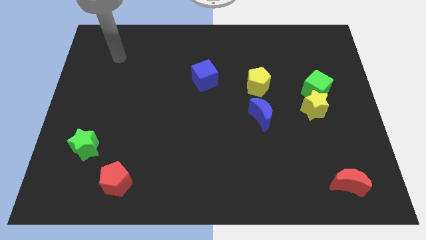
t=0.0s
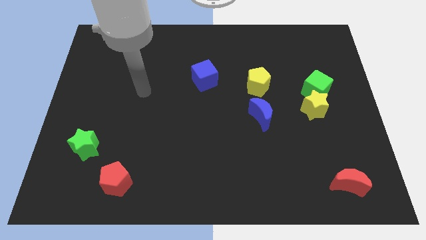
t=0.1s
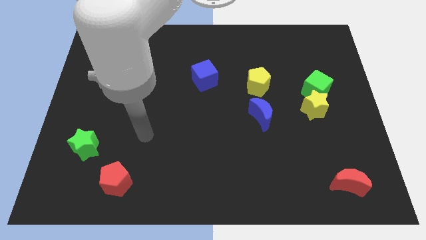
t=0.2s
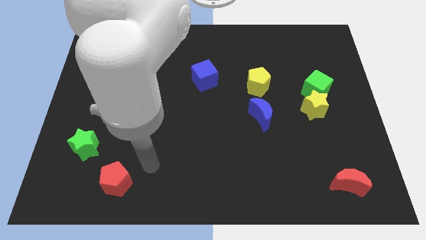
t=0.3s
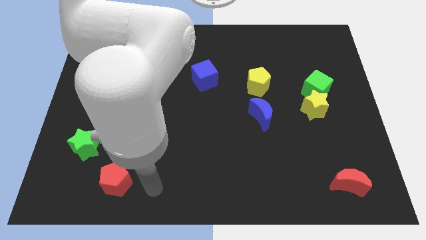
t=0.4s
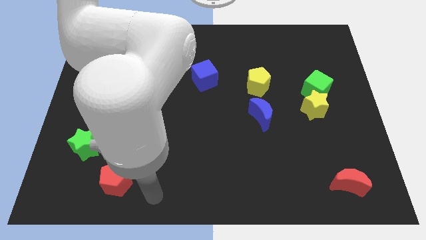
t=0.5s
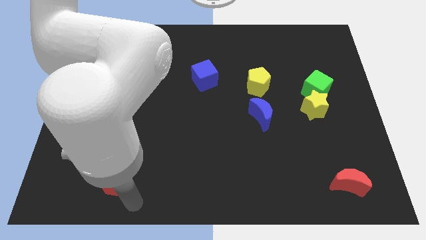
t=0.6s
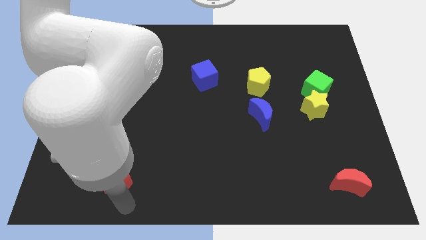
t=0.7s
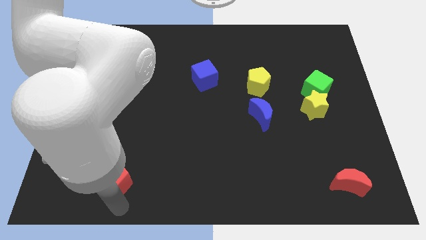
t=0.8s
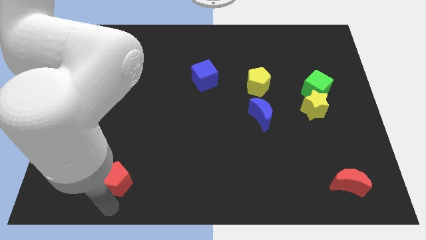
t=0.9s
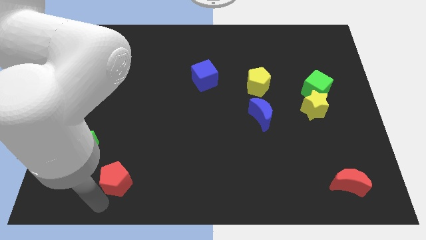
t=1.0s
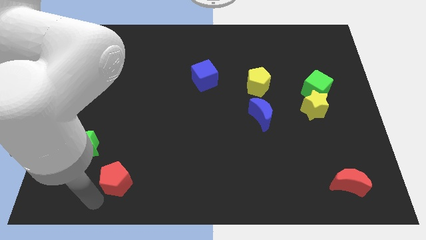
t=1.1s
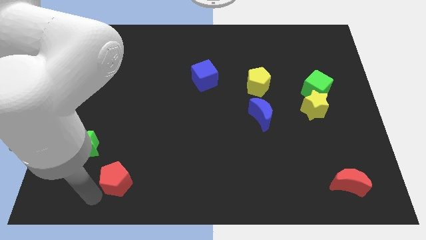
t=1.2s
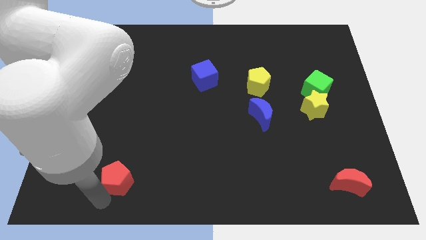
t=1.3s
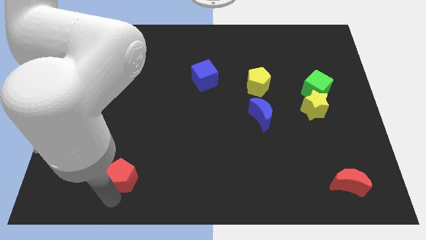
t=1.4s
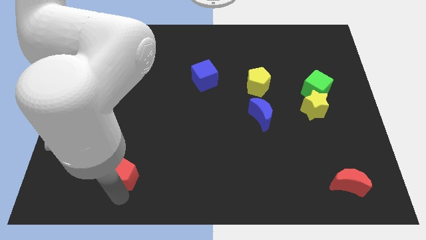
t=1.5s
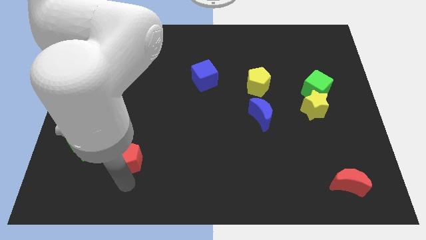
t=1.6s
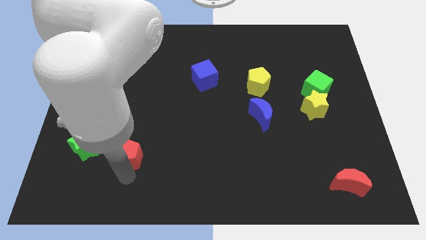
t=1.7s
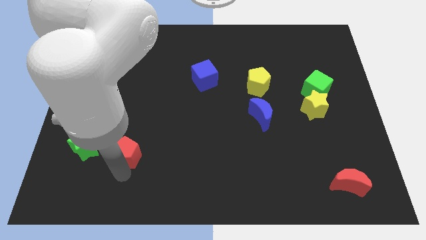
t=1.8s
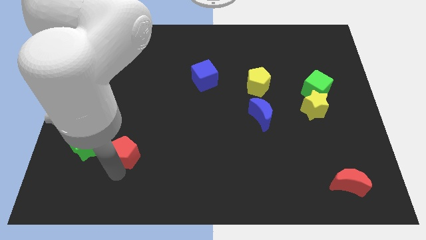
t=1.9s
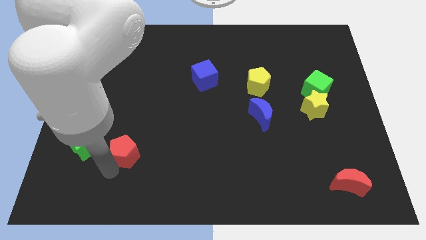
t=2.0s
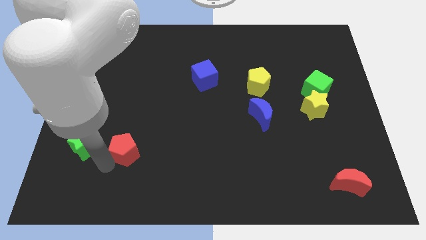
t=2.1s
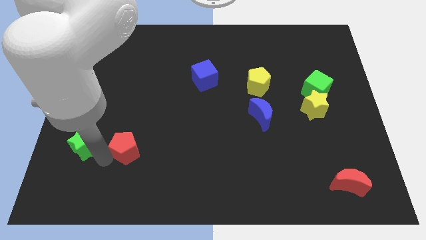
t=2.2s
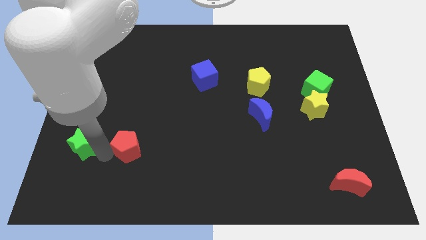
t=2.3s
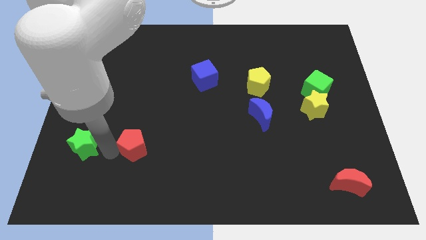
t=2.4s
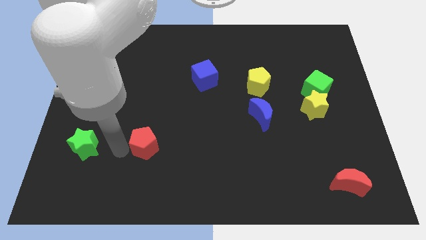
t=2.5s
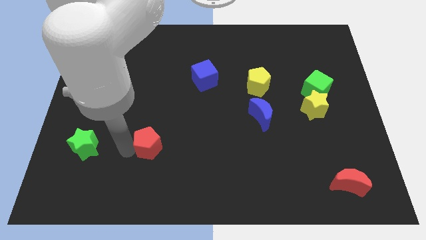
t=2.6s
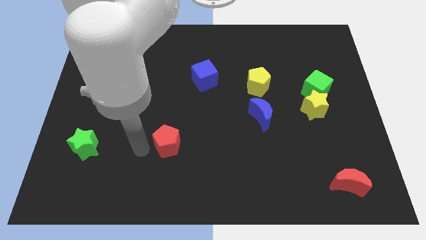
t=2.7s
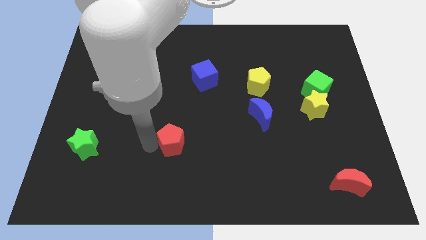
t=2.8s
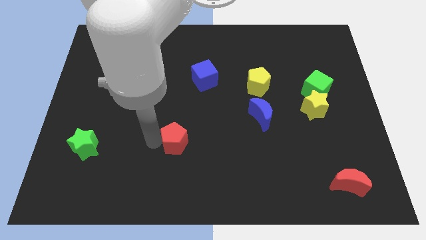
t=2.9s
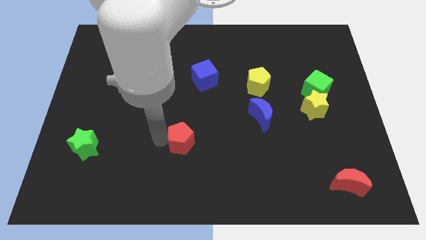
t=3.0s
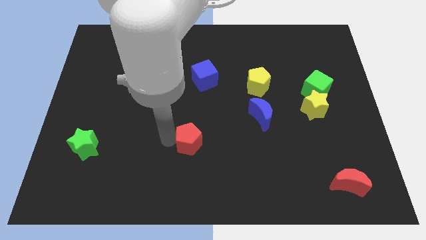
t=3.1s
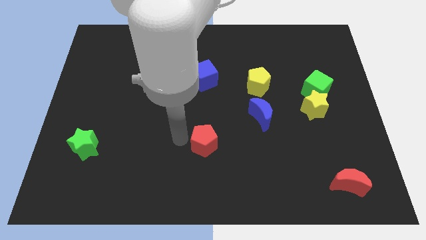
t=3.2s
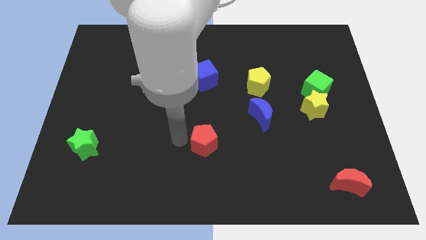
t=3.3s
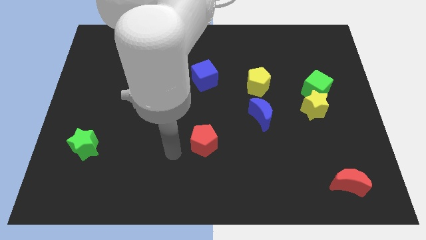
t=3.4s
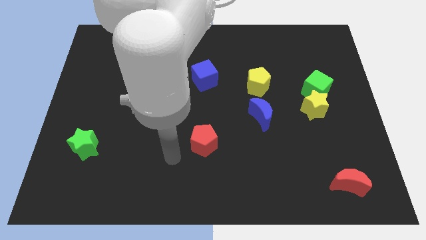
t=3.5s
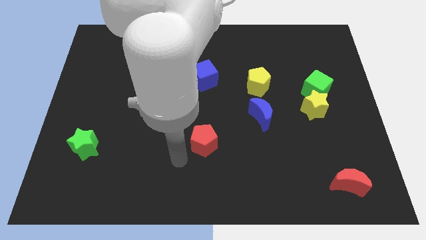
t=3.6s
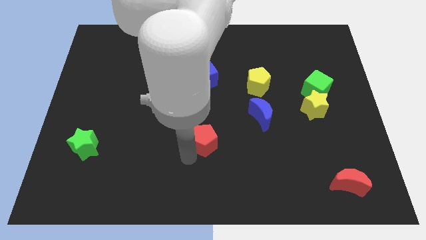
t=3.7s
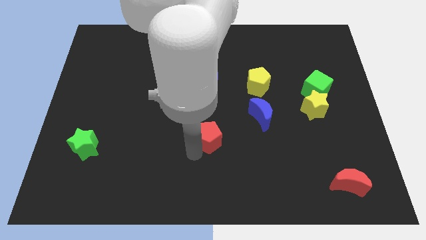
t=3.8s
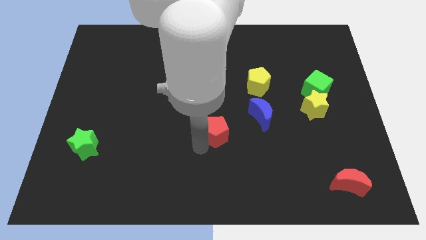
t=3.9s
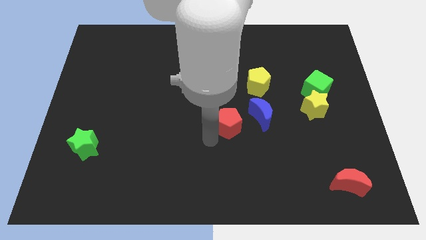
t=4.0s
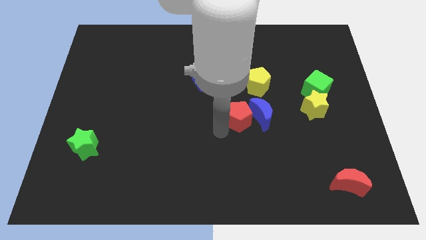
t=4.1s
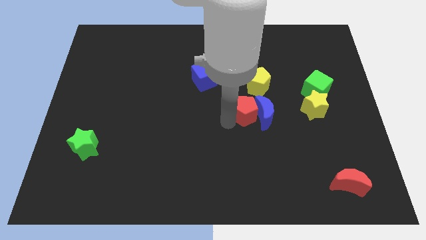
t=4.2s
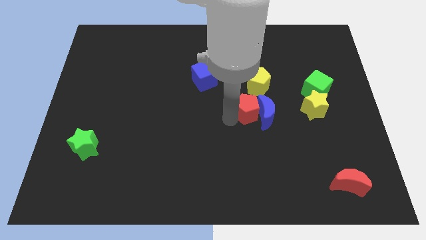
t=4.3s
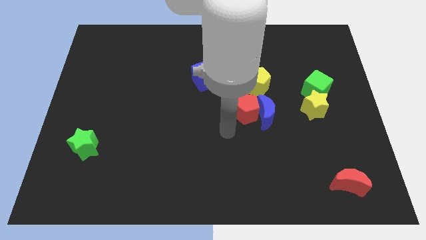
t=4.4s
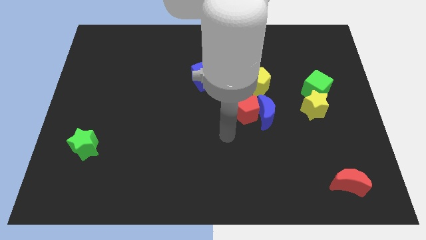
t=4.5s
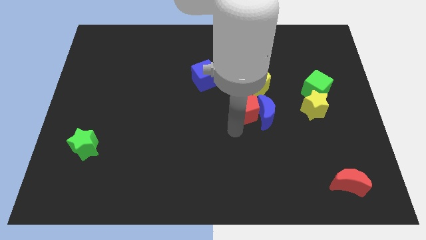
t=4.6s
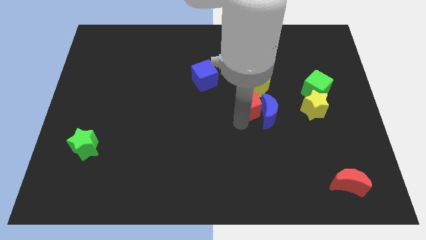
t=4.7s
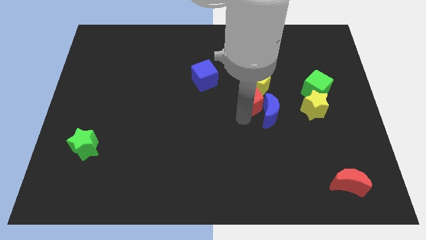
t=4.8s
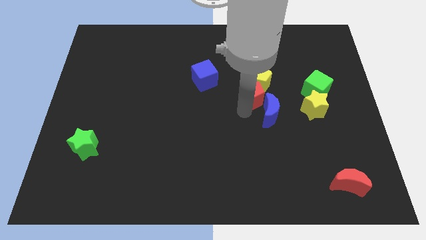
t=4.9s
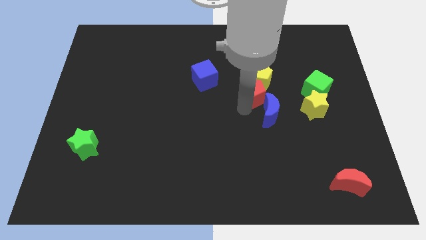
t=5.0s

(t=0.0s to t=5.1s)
slide the red pentagon towards the yellow pentagon

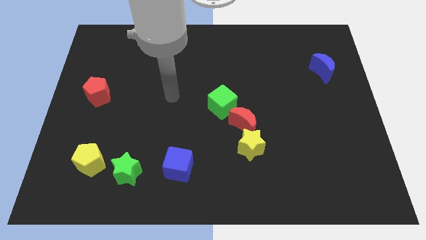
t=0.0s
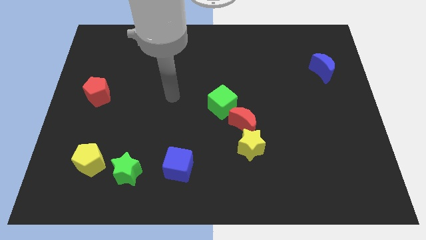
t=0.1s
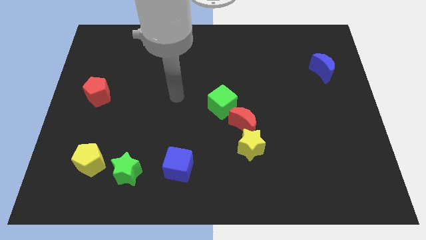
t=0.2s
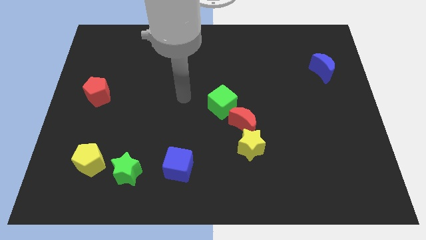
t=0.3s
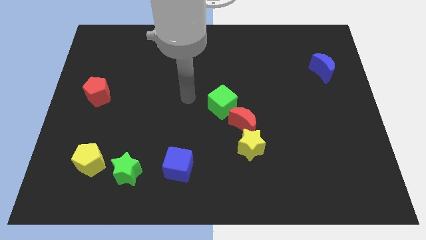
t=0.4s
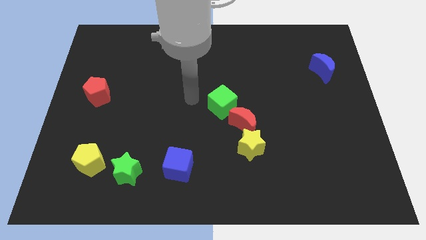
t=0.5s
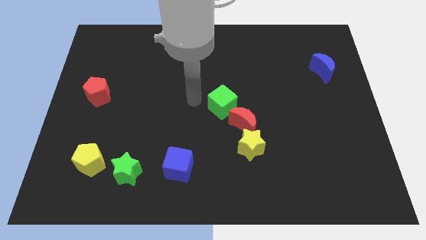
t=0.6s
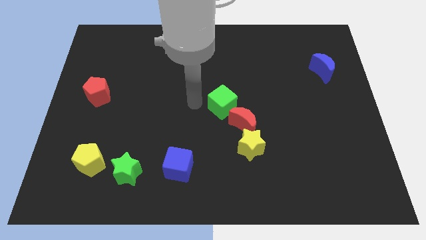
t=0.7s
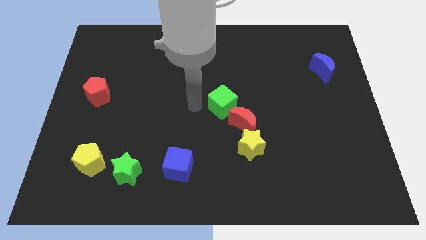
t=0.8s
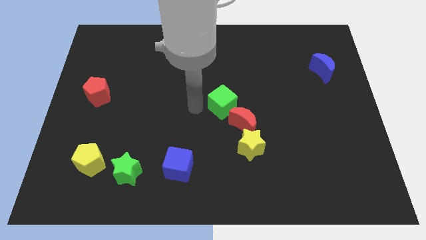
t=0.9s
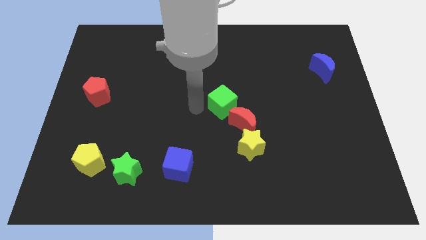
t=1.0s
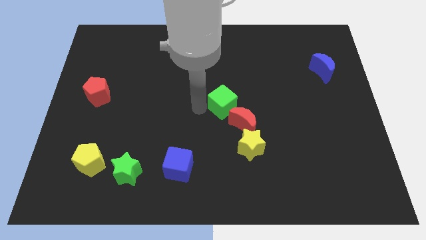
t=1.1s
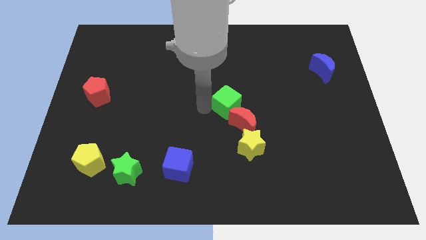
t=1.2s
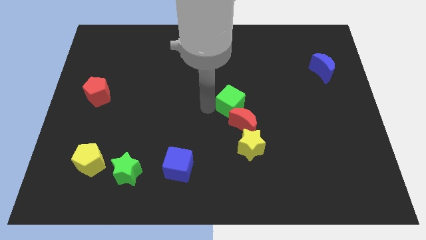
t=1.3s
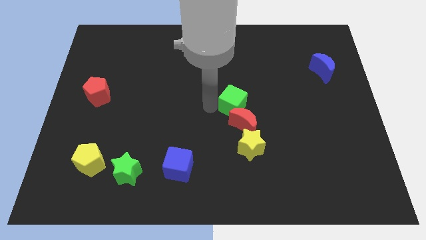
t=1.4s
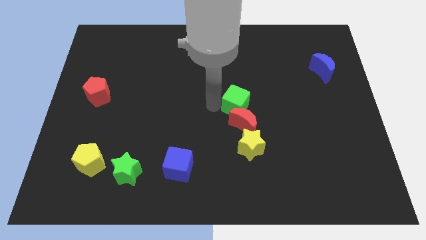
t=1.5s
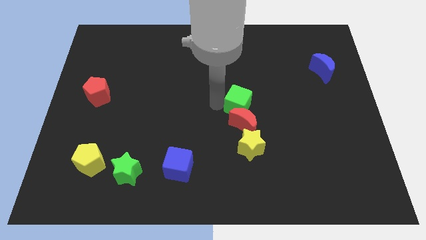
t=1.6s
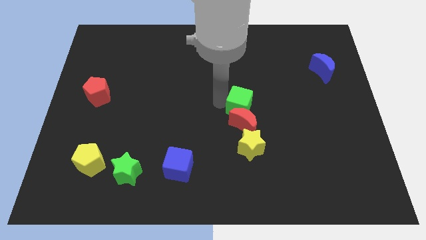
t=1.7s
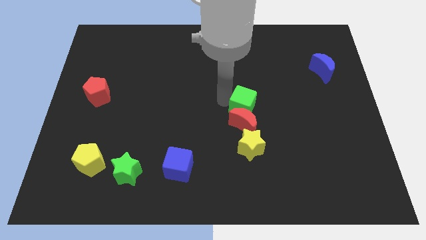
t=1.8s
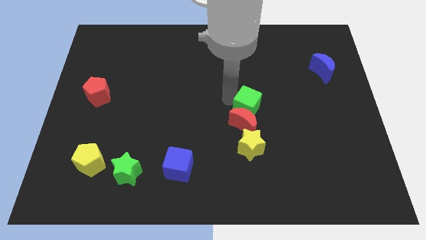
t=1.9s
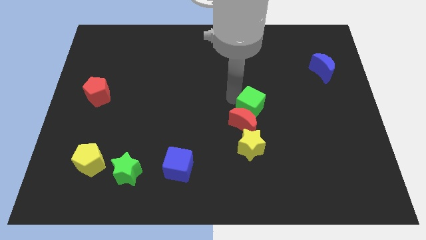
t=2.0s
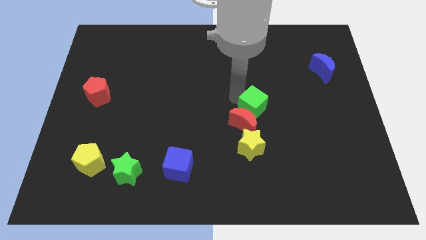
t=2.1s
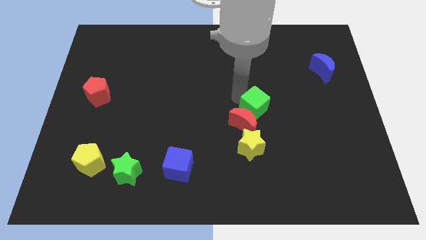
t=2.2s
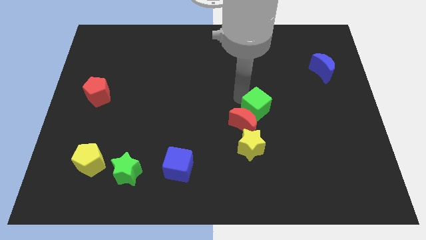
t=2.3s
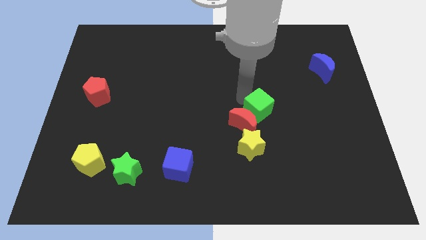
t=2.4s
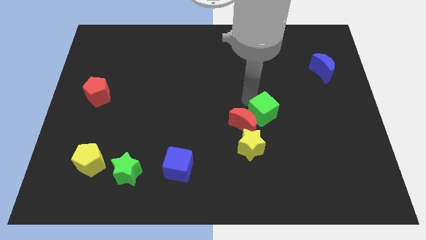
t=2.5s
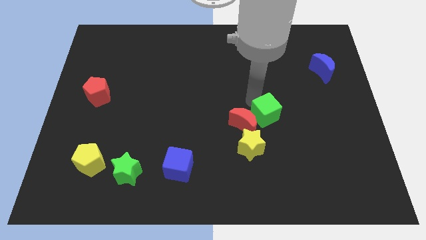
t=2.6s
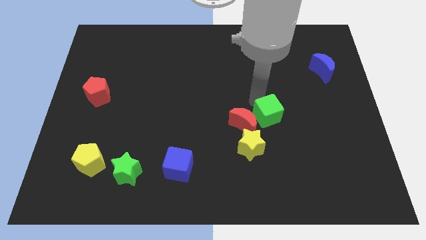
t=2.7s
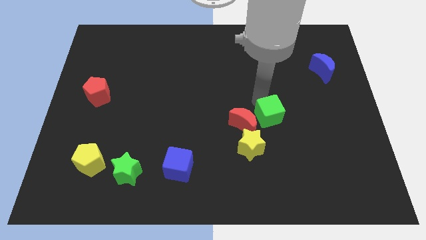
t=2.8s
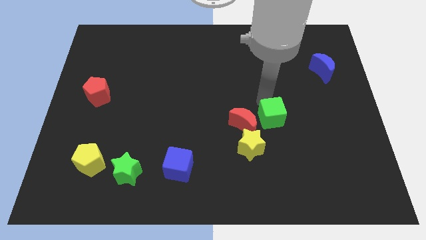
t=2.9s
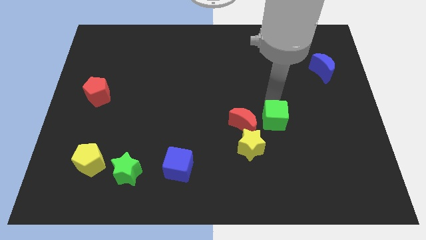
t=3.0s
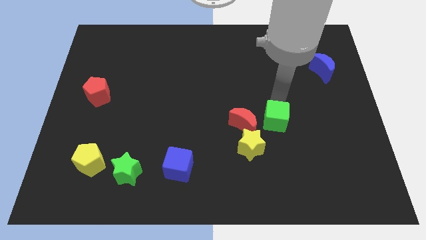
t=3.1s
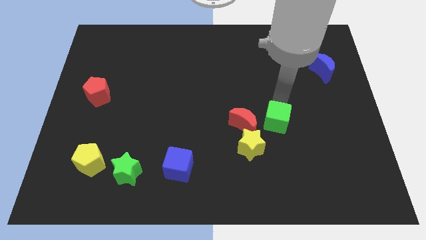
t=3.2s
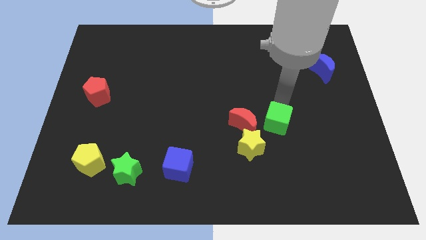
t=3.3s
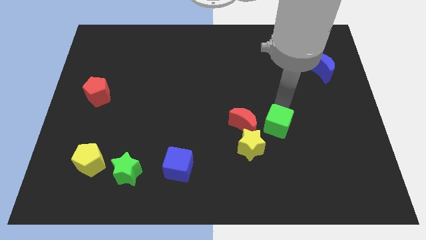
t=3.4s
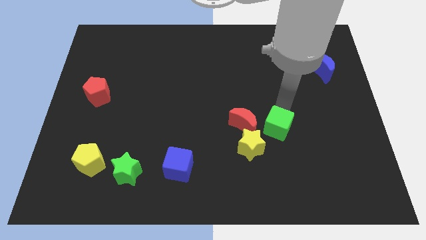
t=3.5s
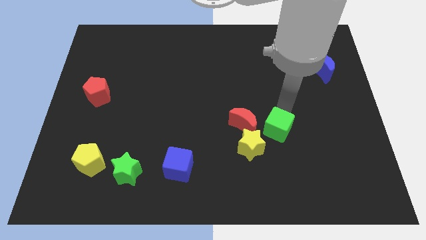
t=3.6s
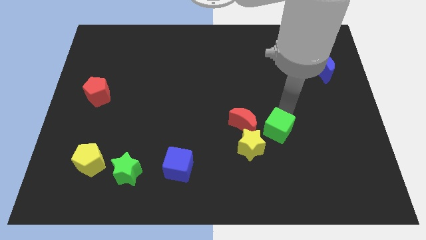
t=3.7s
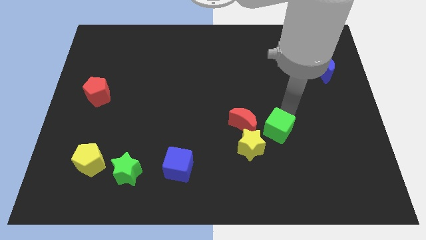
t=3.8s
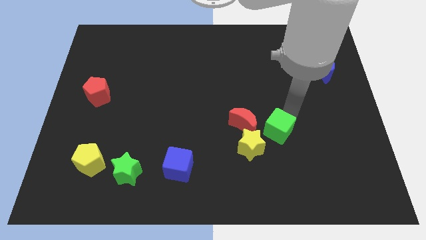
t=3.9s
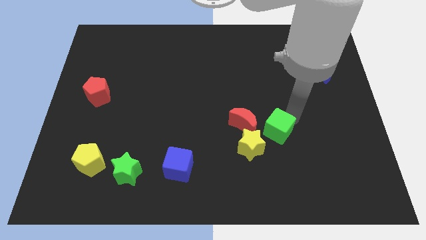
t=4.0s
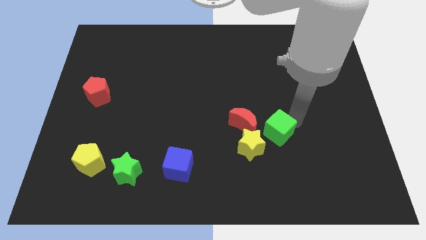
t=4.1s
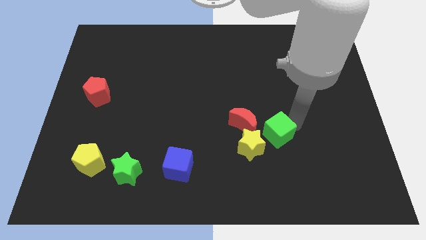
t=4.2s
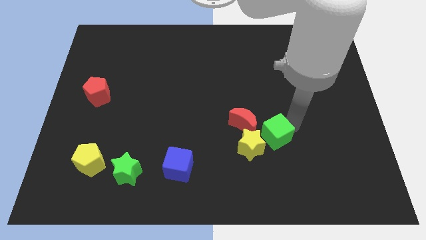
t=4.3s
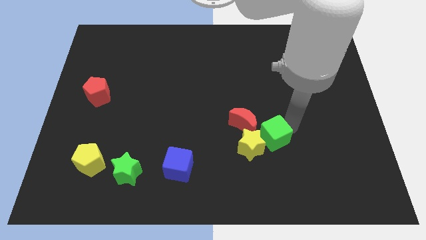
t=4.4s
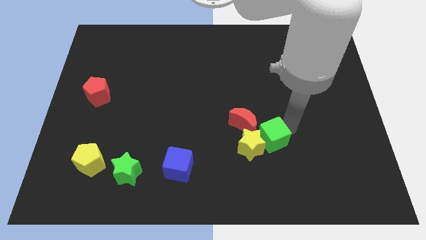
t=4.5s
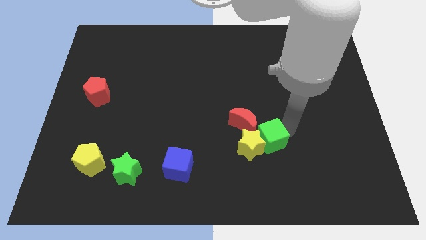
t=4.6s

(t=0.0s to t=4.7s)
slide the green cube towards the yellow star
